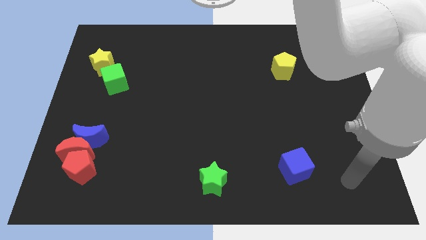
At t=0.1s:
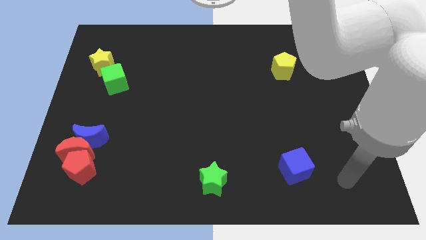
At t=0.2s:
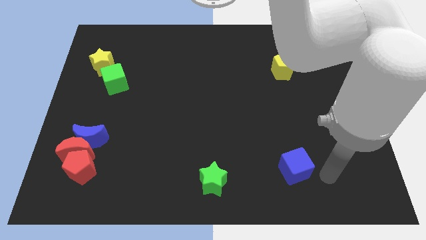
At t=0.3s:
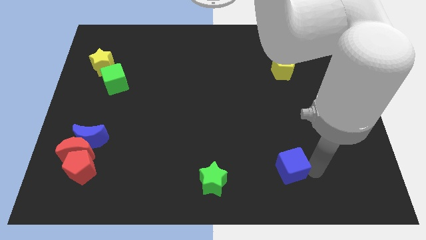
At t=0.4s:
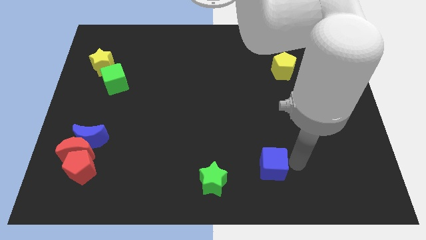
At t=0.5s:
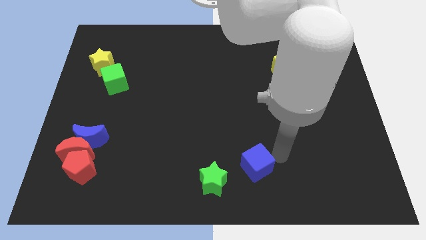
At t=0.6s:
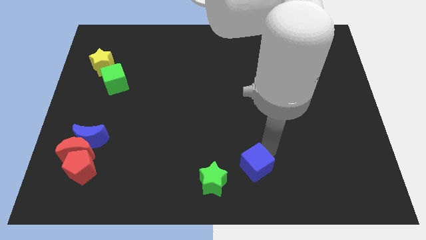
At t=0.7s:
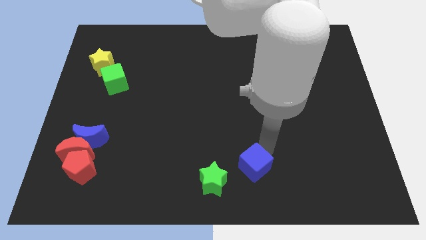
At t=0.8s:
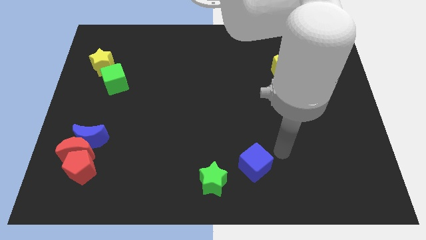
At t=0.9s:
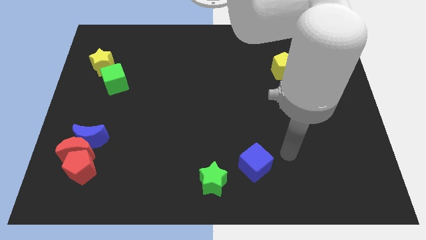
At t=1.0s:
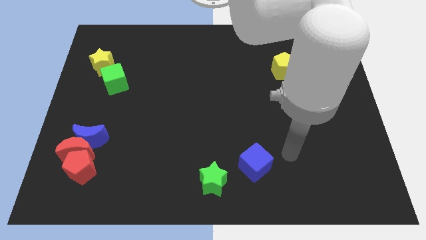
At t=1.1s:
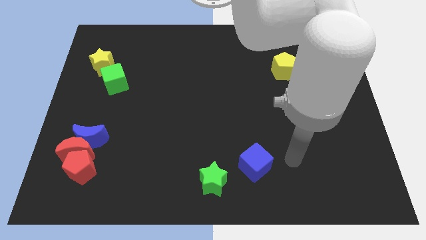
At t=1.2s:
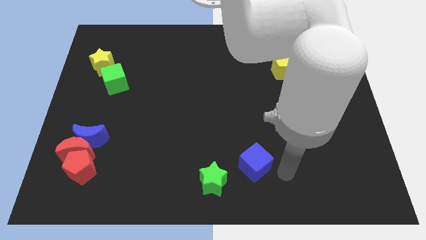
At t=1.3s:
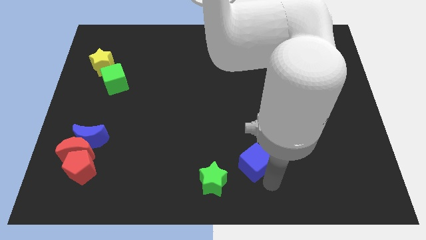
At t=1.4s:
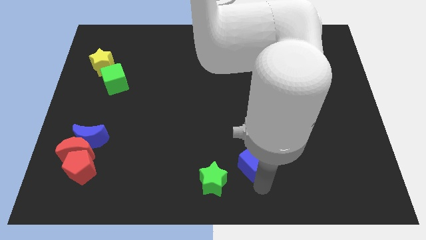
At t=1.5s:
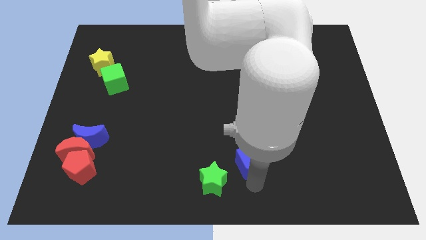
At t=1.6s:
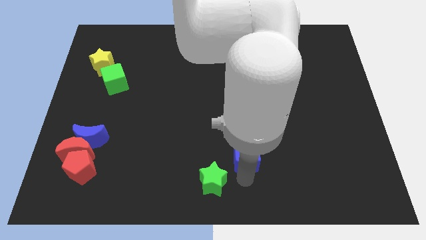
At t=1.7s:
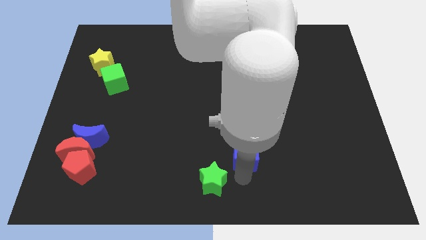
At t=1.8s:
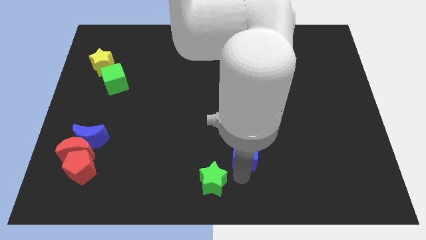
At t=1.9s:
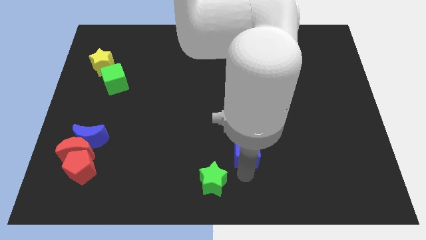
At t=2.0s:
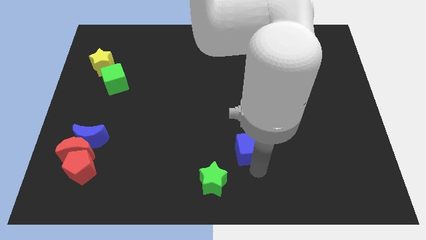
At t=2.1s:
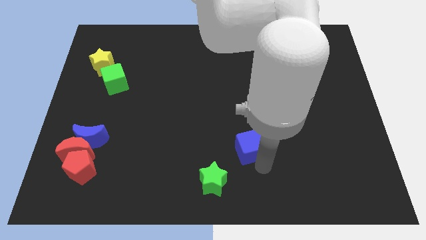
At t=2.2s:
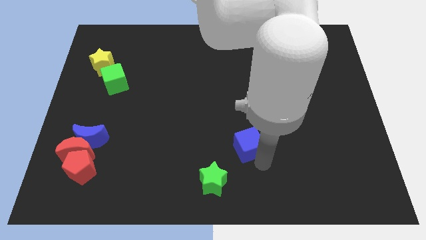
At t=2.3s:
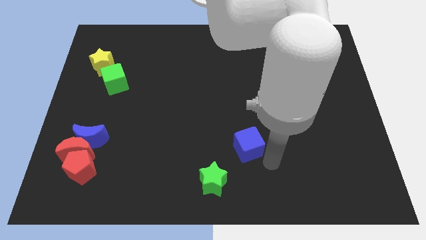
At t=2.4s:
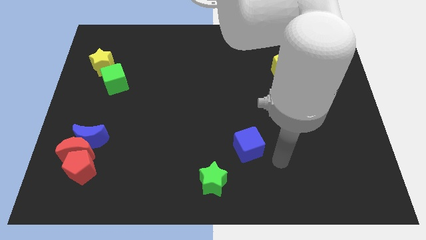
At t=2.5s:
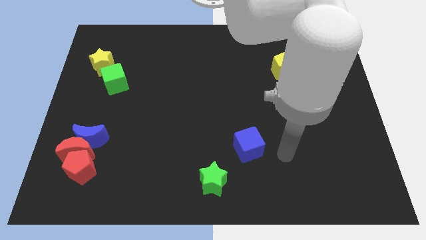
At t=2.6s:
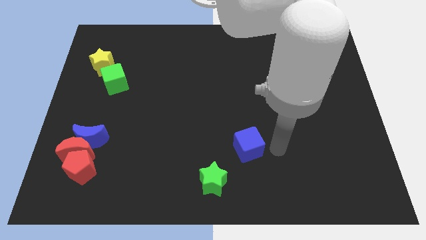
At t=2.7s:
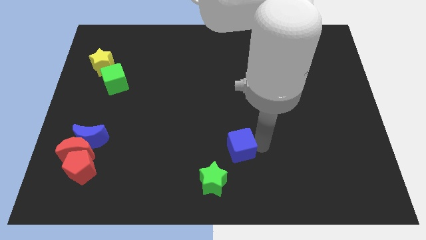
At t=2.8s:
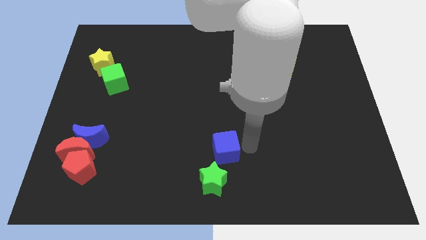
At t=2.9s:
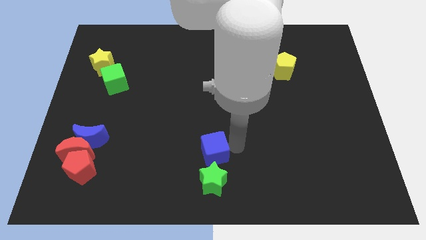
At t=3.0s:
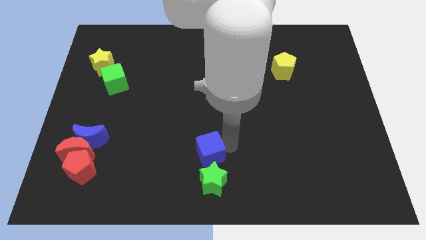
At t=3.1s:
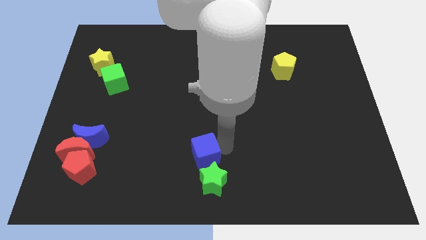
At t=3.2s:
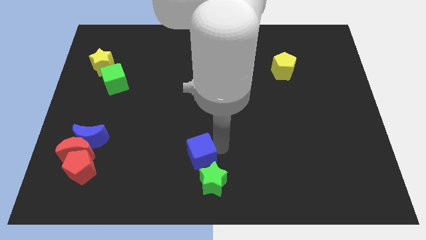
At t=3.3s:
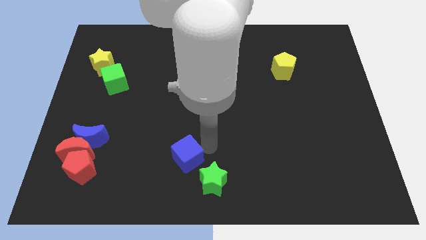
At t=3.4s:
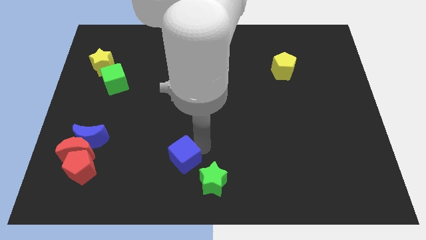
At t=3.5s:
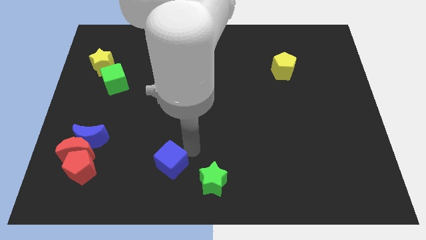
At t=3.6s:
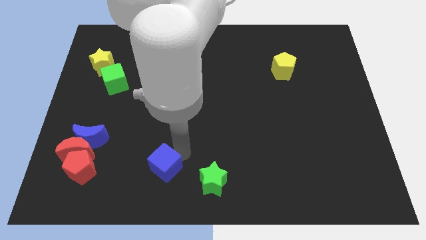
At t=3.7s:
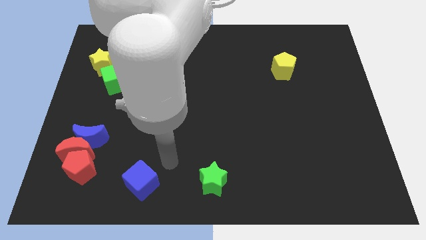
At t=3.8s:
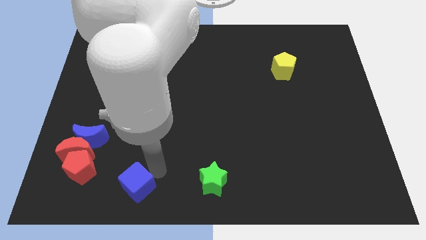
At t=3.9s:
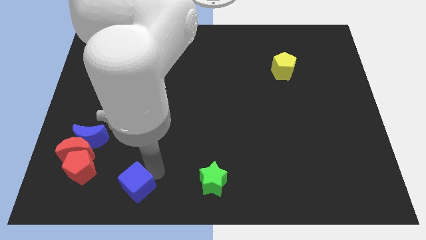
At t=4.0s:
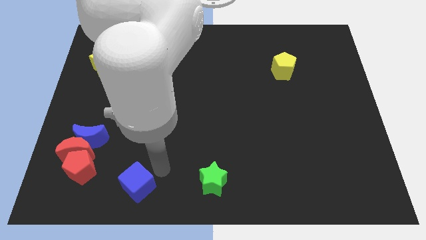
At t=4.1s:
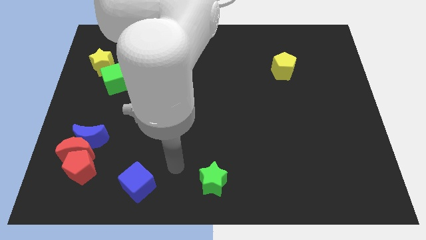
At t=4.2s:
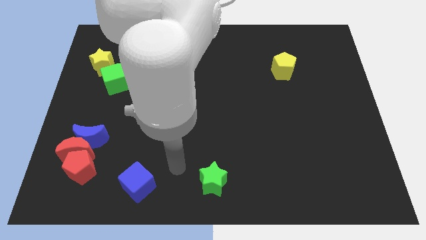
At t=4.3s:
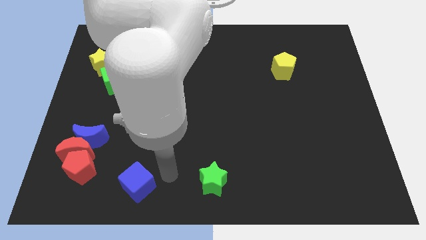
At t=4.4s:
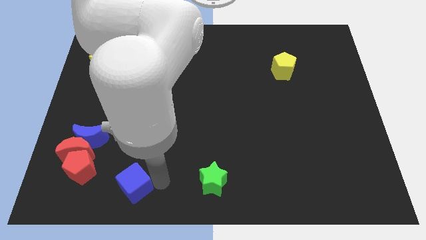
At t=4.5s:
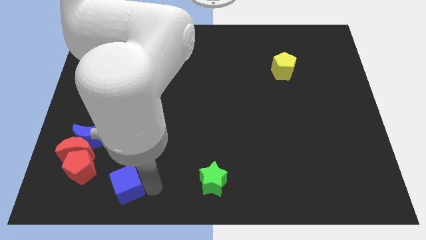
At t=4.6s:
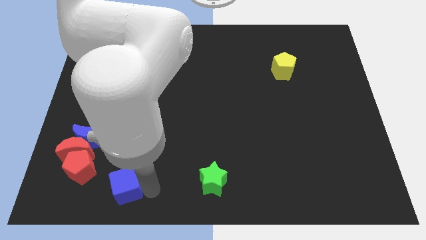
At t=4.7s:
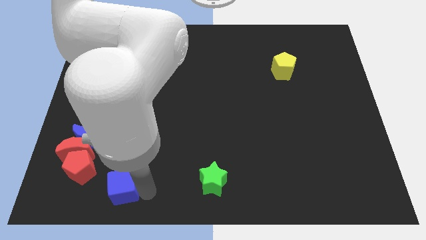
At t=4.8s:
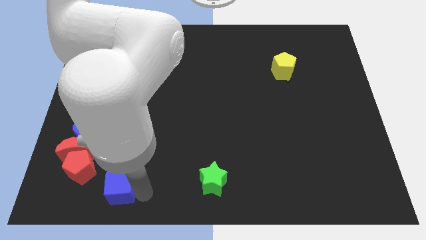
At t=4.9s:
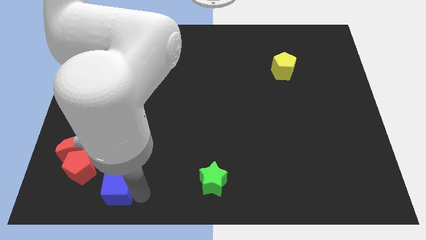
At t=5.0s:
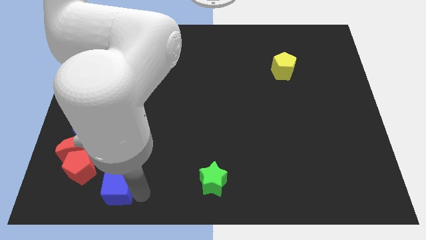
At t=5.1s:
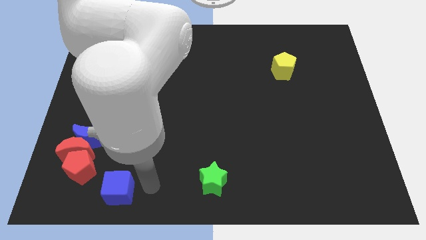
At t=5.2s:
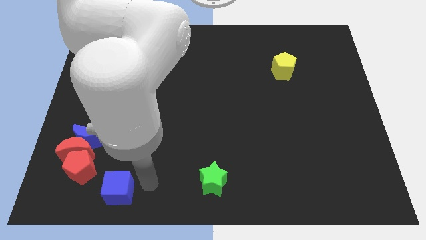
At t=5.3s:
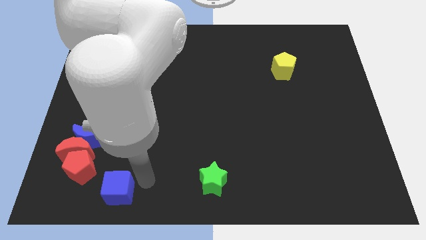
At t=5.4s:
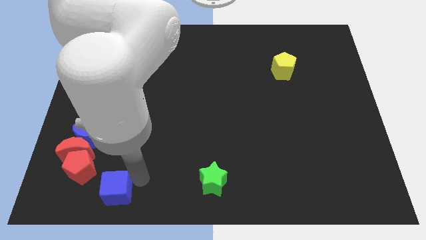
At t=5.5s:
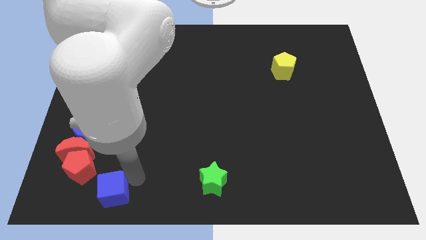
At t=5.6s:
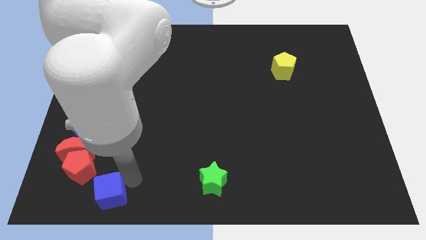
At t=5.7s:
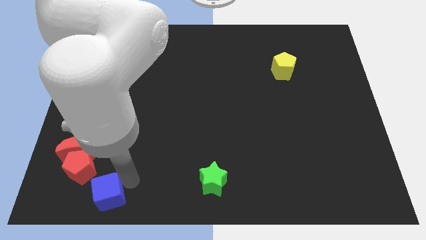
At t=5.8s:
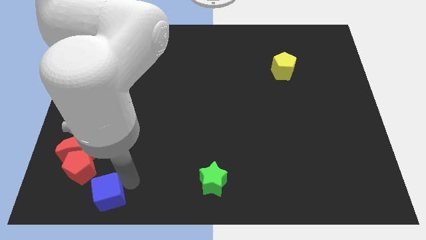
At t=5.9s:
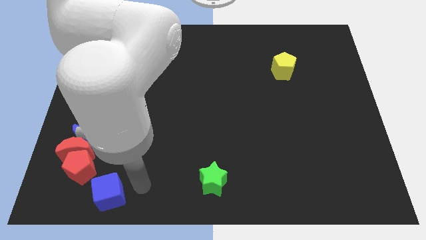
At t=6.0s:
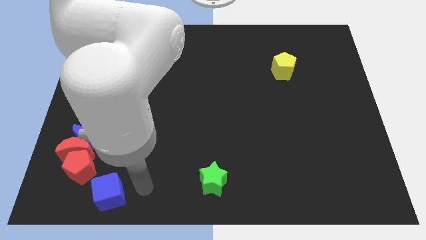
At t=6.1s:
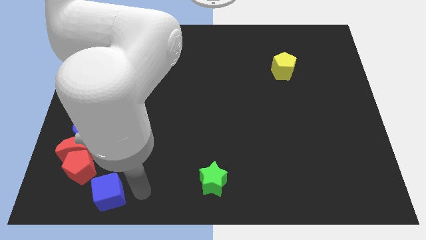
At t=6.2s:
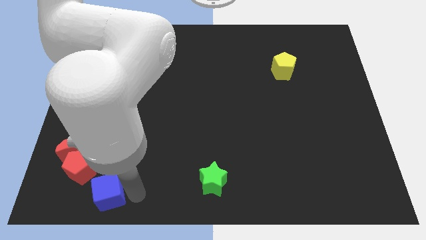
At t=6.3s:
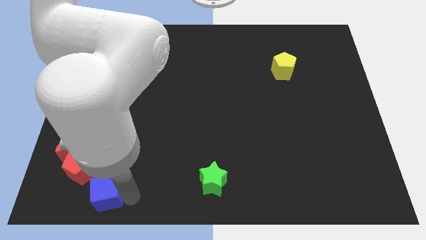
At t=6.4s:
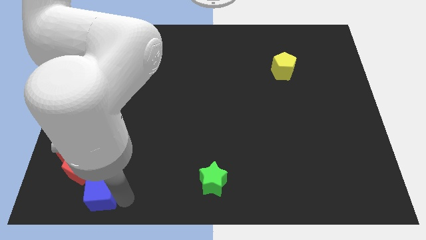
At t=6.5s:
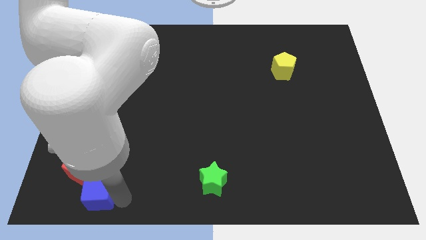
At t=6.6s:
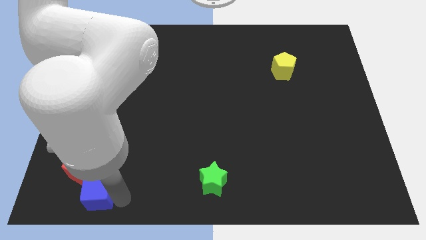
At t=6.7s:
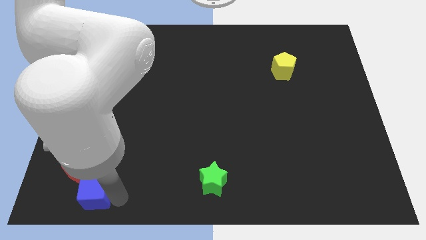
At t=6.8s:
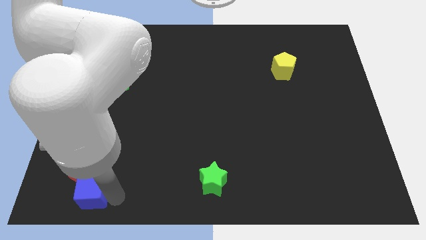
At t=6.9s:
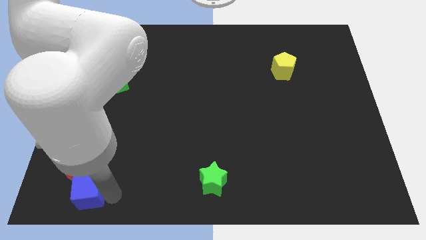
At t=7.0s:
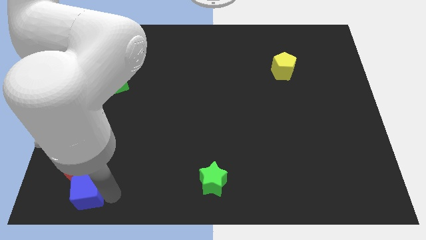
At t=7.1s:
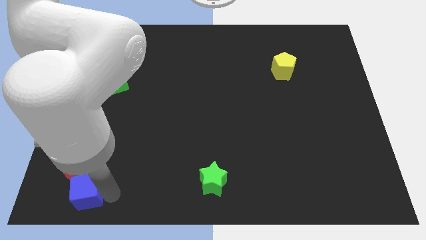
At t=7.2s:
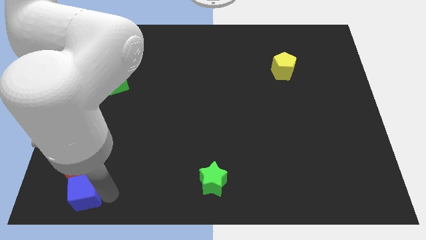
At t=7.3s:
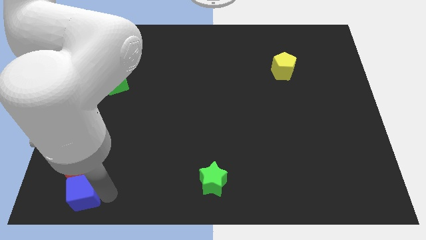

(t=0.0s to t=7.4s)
push the blue cube towards the red pentagon

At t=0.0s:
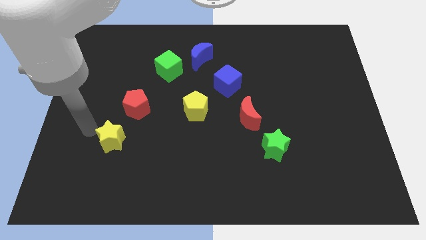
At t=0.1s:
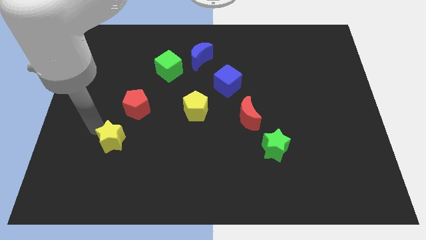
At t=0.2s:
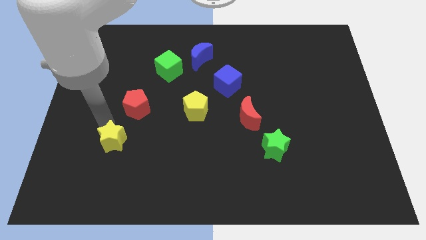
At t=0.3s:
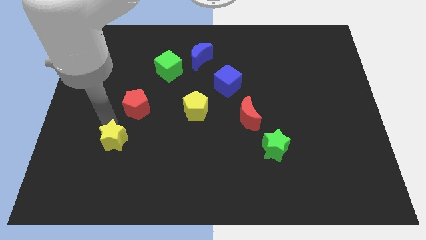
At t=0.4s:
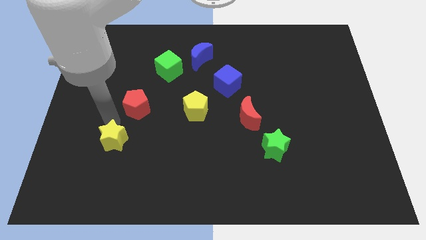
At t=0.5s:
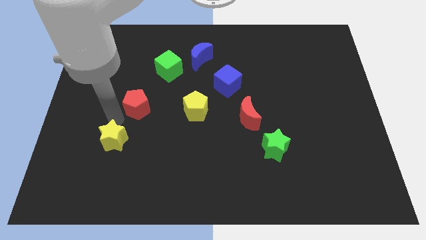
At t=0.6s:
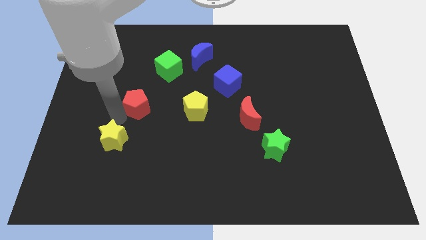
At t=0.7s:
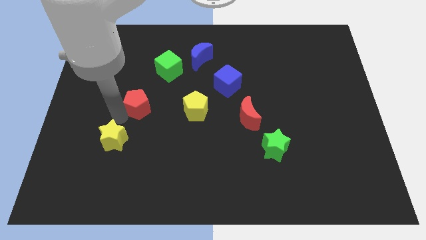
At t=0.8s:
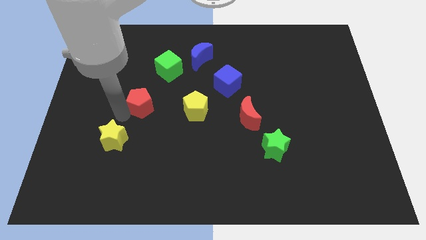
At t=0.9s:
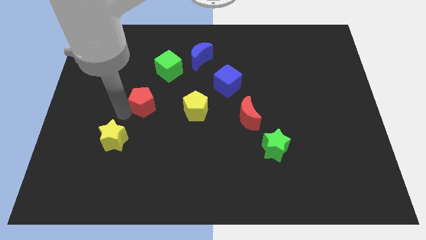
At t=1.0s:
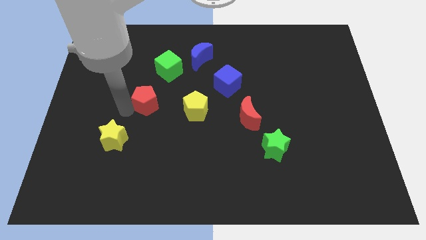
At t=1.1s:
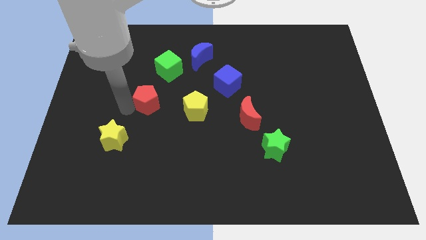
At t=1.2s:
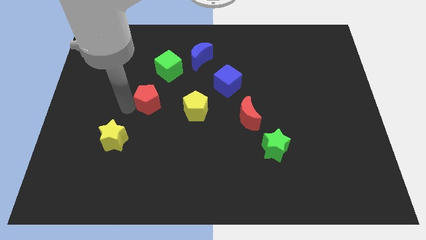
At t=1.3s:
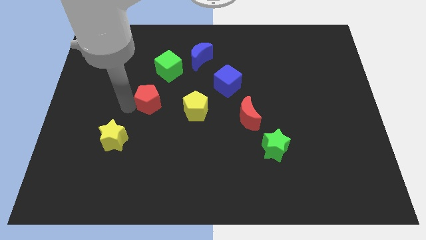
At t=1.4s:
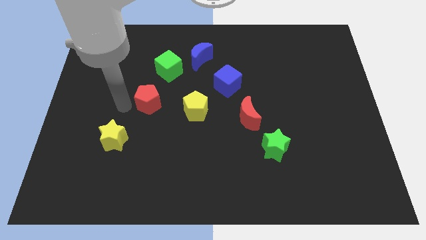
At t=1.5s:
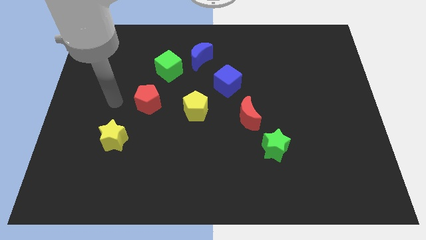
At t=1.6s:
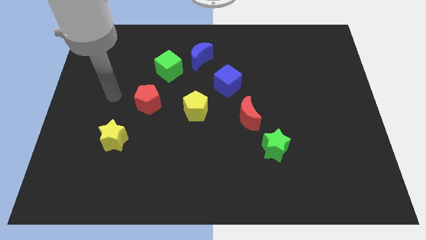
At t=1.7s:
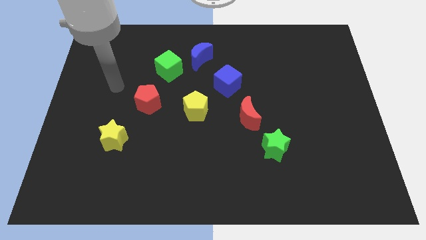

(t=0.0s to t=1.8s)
move the red pentagon slightly towards the top center
